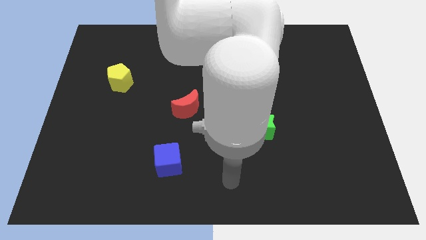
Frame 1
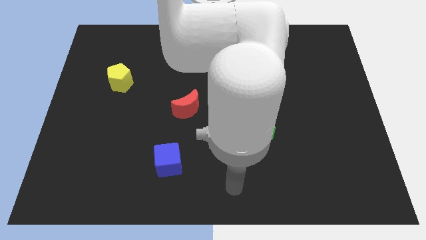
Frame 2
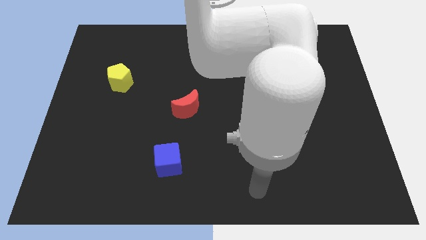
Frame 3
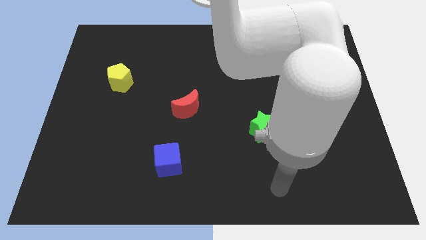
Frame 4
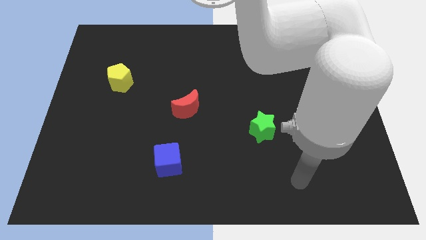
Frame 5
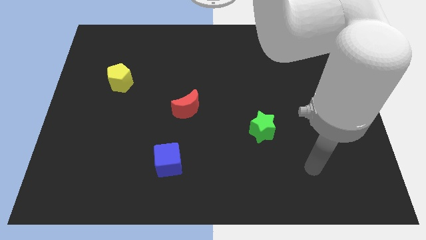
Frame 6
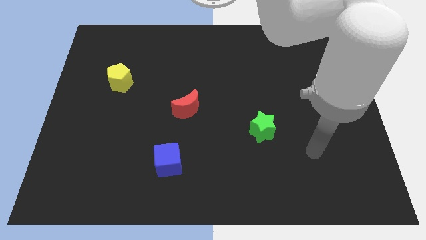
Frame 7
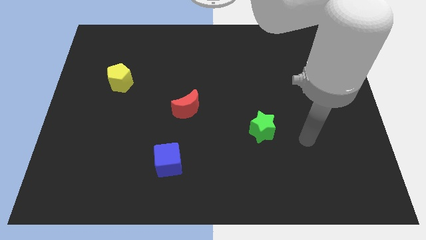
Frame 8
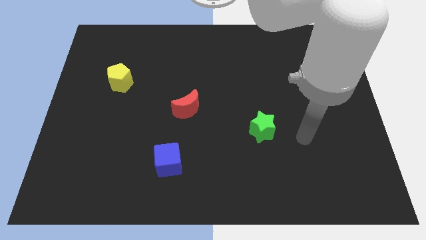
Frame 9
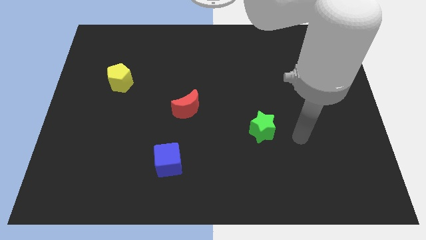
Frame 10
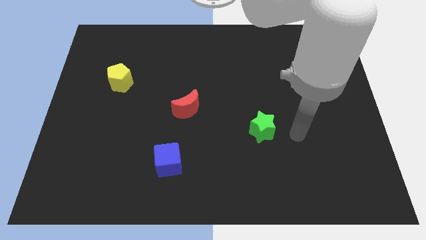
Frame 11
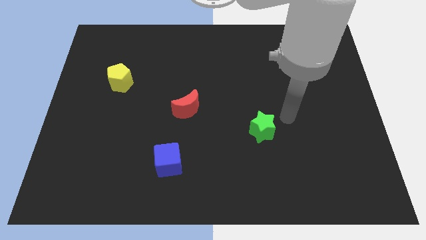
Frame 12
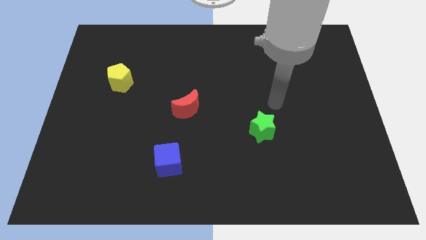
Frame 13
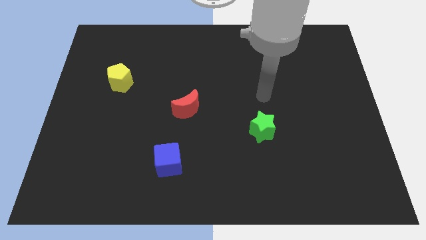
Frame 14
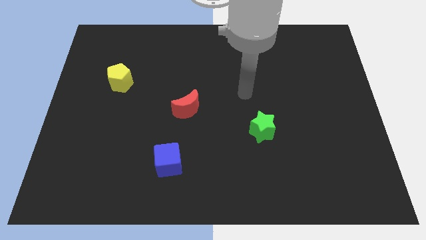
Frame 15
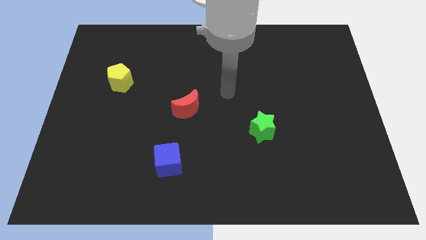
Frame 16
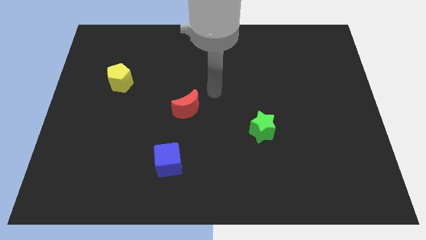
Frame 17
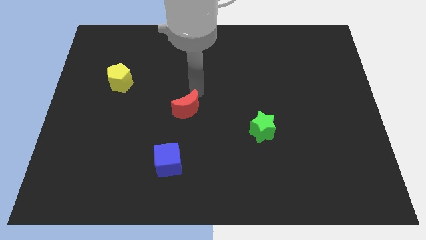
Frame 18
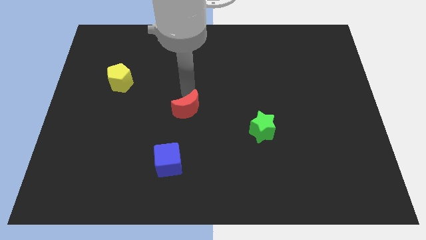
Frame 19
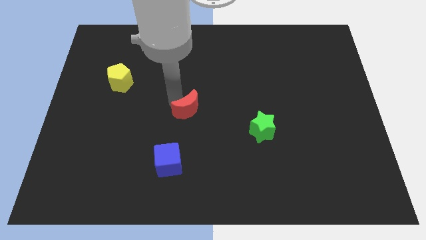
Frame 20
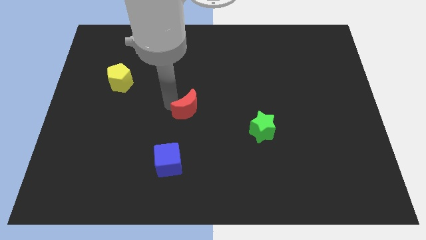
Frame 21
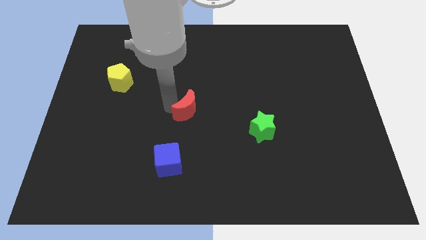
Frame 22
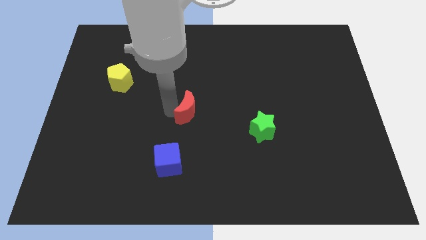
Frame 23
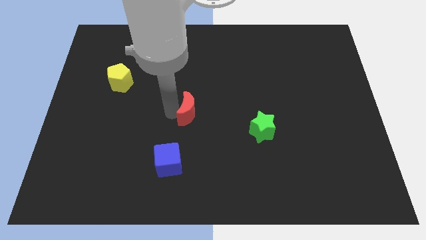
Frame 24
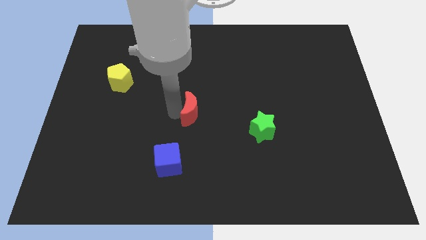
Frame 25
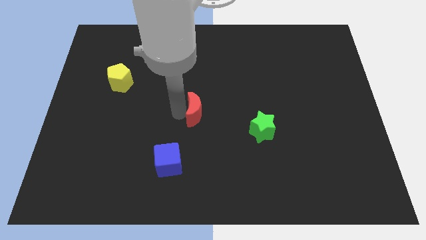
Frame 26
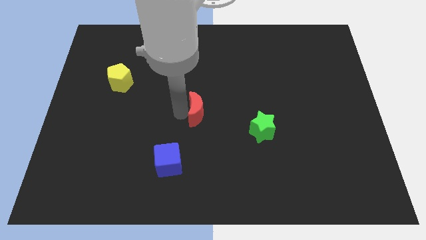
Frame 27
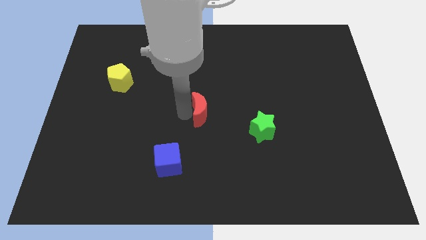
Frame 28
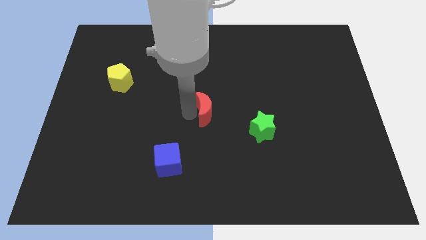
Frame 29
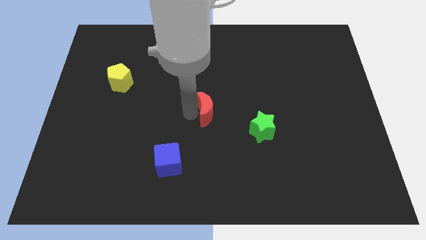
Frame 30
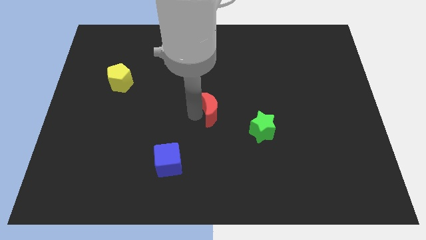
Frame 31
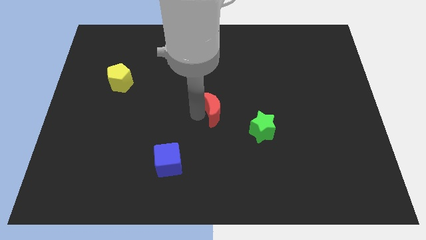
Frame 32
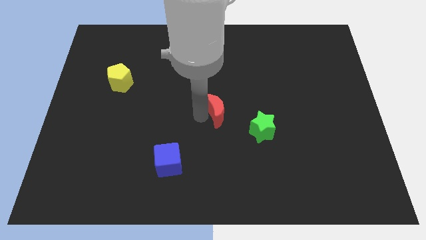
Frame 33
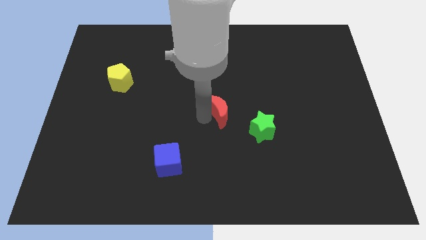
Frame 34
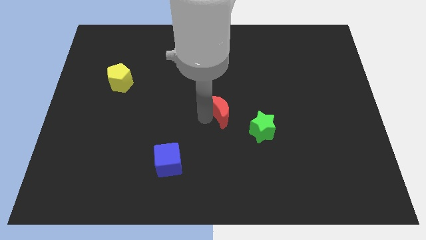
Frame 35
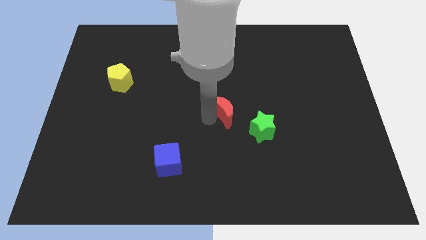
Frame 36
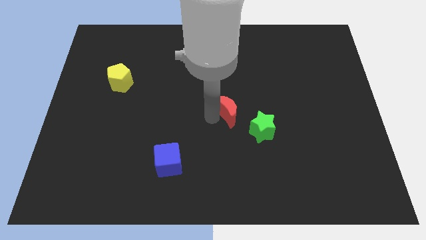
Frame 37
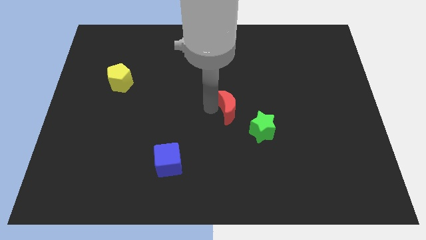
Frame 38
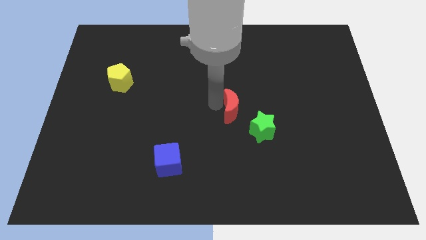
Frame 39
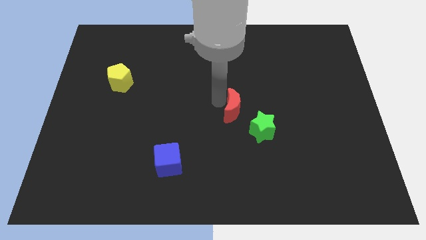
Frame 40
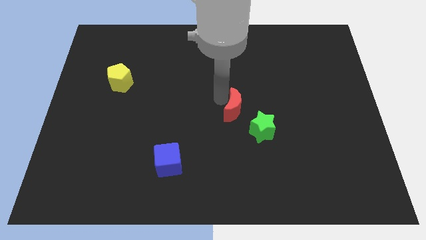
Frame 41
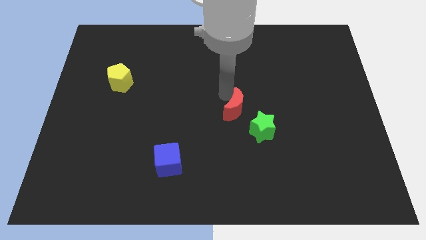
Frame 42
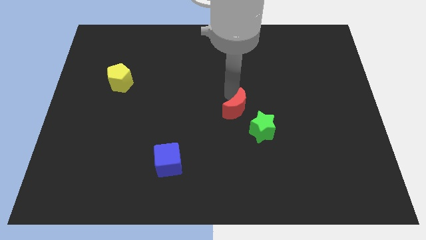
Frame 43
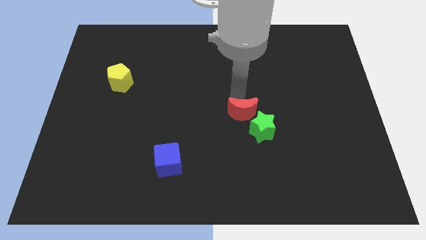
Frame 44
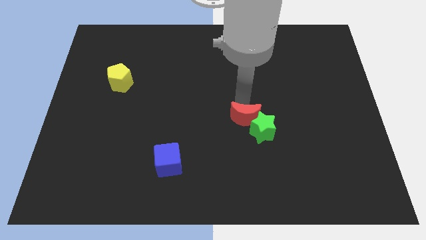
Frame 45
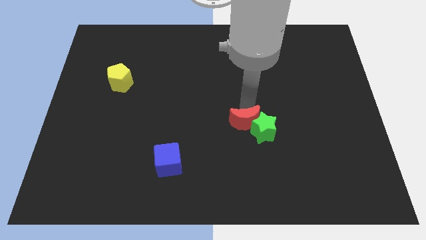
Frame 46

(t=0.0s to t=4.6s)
push the moon to the green star

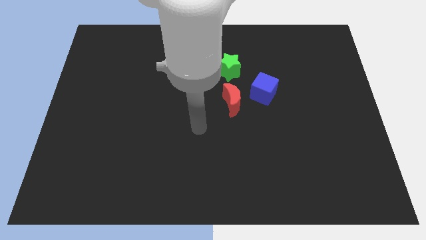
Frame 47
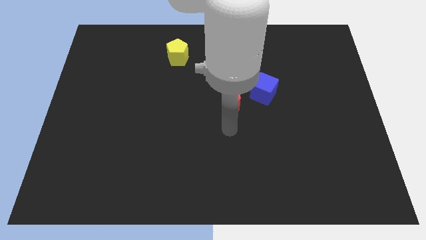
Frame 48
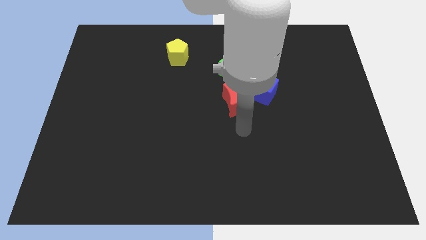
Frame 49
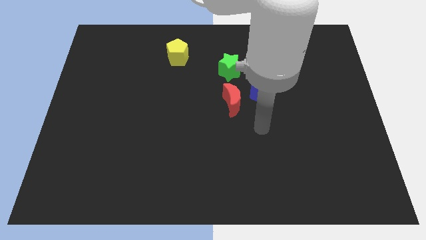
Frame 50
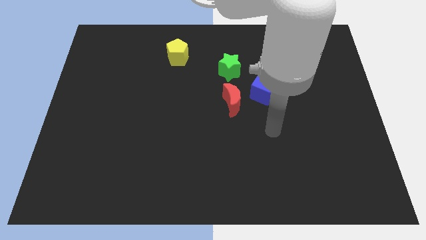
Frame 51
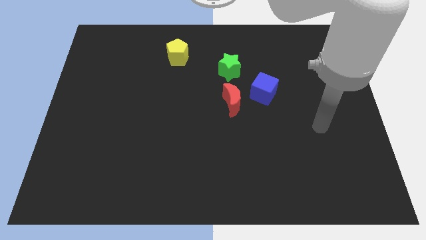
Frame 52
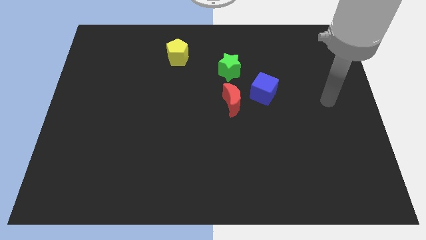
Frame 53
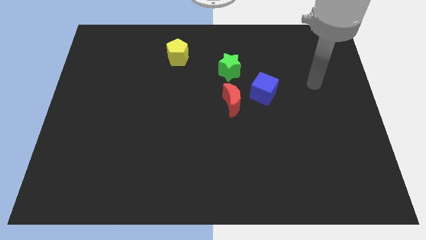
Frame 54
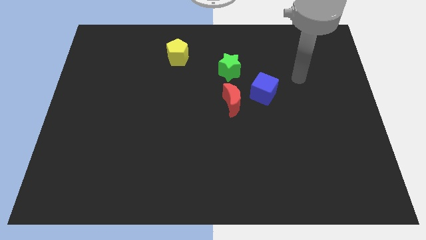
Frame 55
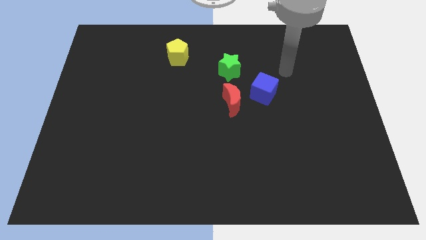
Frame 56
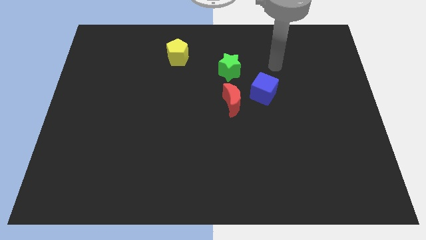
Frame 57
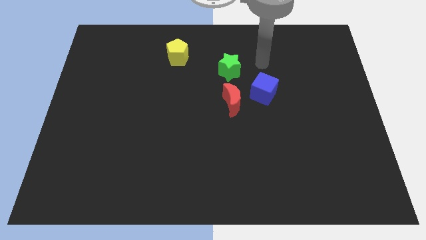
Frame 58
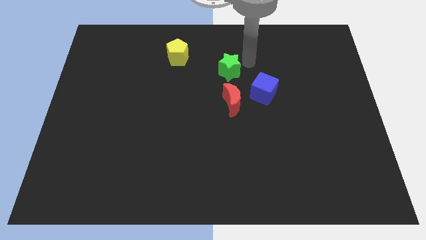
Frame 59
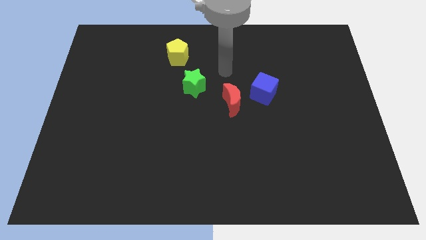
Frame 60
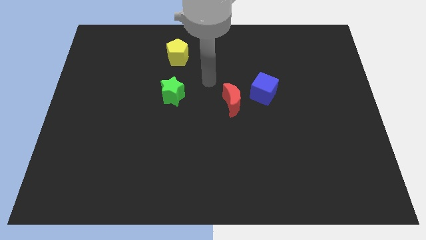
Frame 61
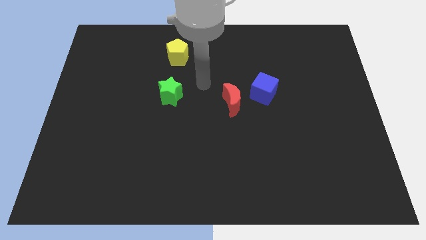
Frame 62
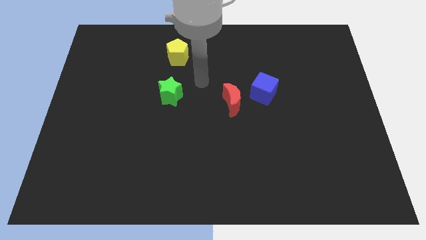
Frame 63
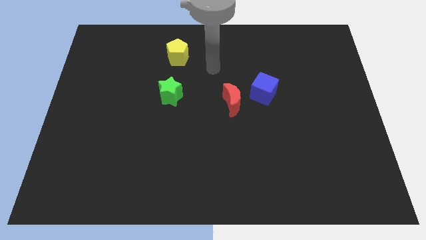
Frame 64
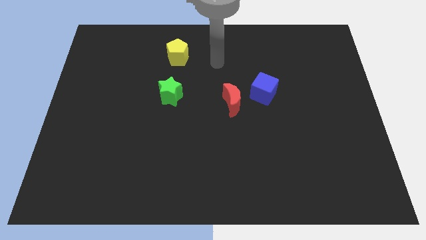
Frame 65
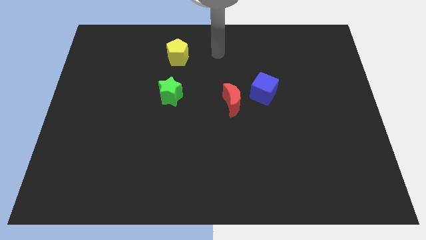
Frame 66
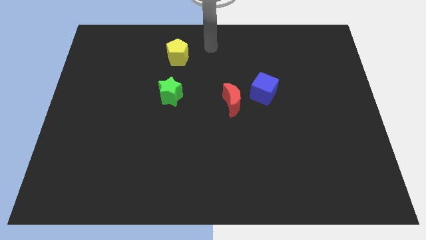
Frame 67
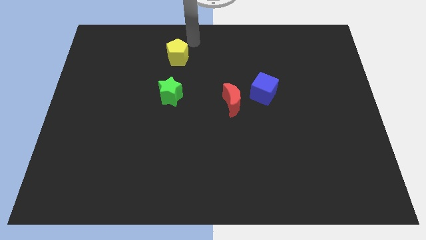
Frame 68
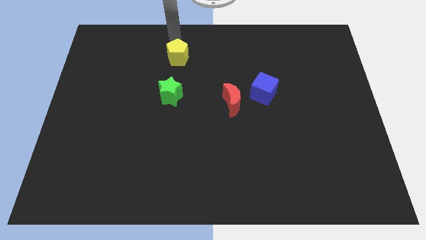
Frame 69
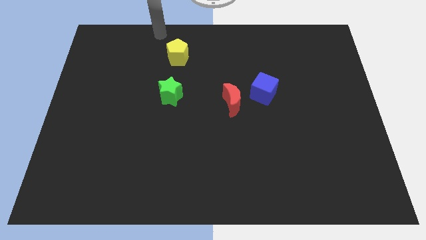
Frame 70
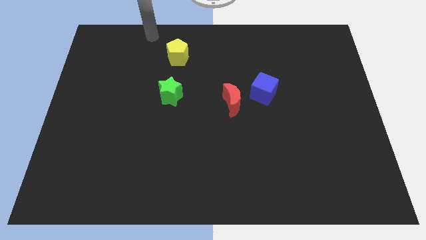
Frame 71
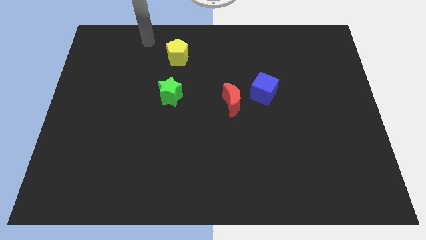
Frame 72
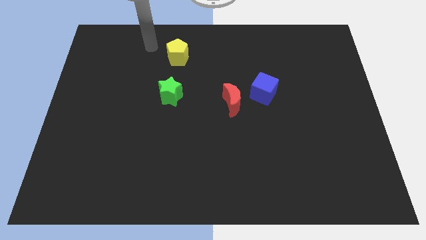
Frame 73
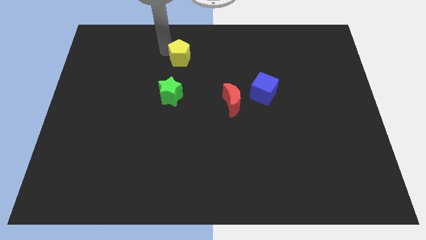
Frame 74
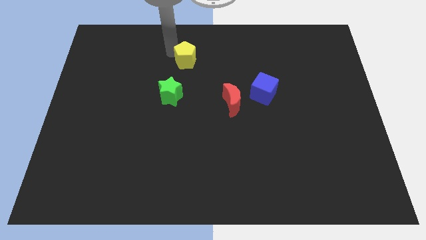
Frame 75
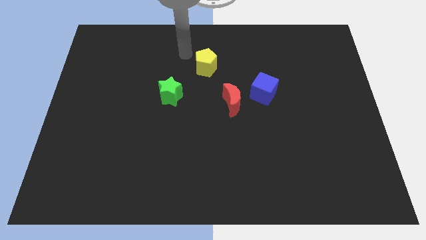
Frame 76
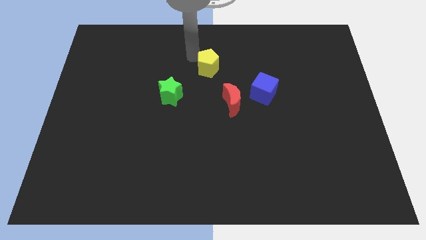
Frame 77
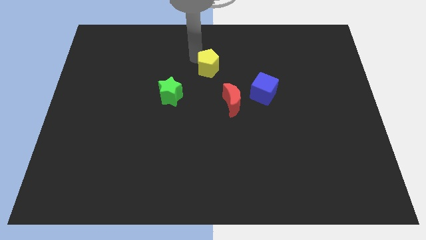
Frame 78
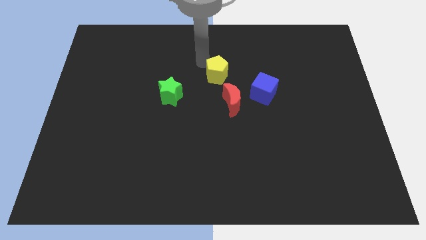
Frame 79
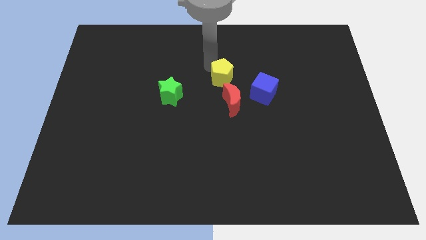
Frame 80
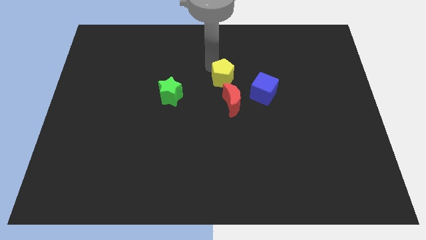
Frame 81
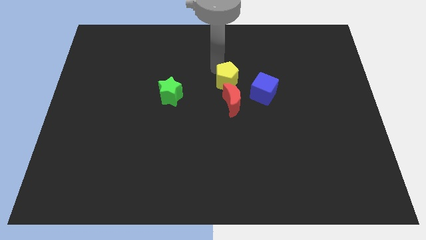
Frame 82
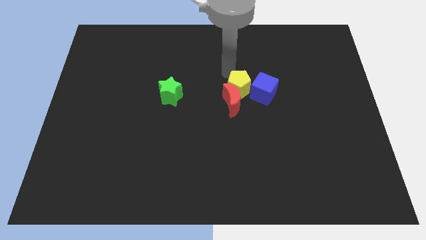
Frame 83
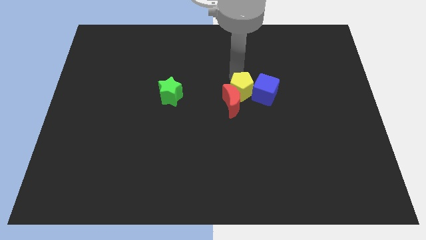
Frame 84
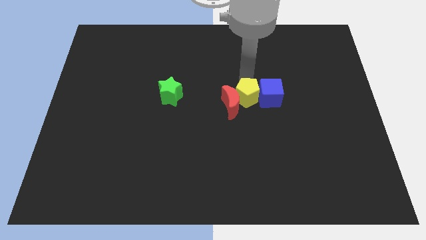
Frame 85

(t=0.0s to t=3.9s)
slide the yellow block to the blue block

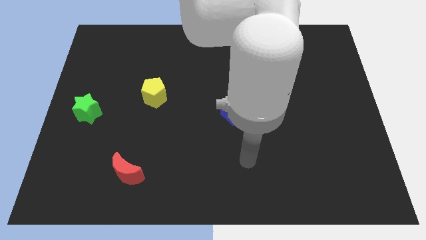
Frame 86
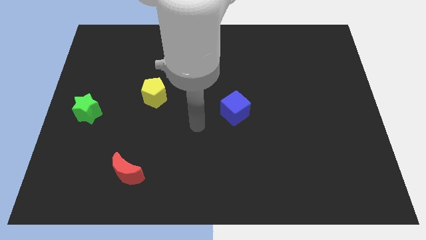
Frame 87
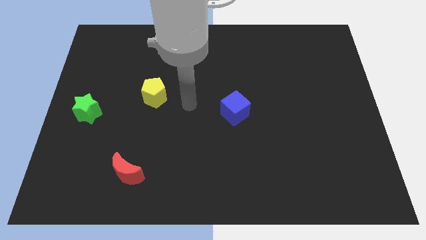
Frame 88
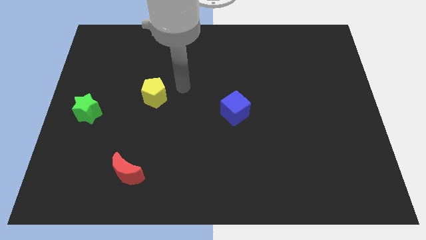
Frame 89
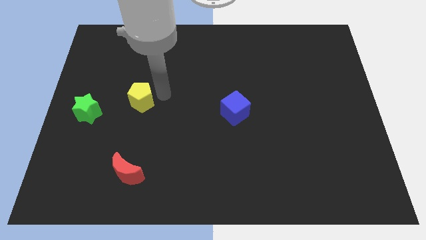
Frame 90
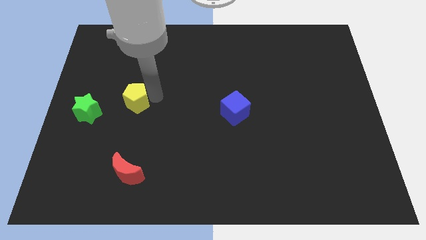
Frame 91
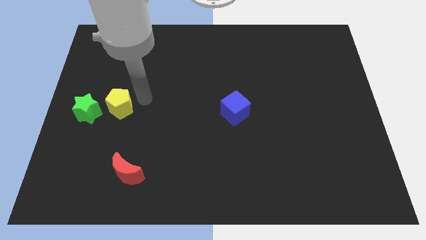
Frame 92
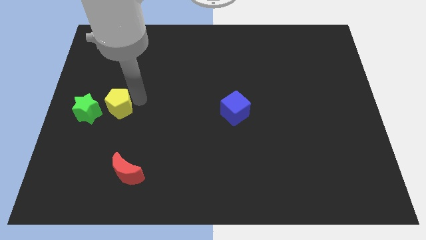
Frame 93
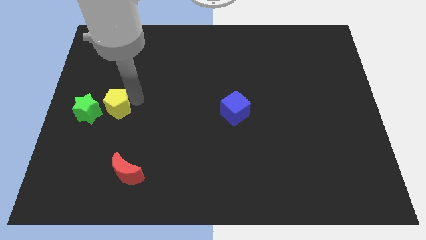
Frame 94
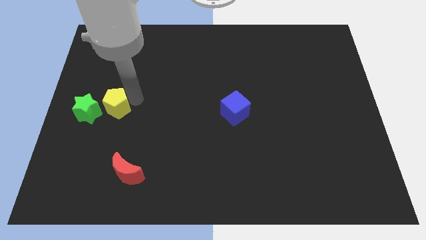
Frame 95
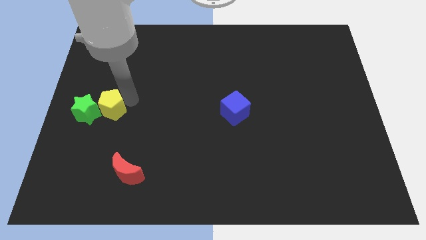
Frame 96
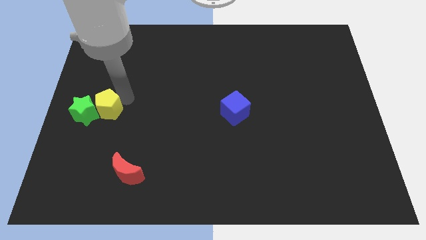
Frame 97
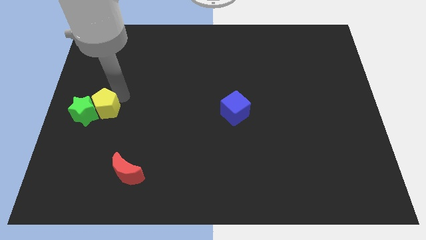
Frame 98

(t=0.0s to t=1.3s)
put the yellow block close to the star
